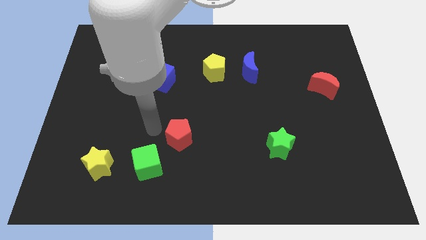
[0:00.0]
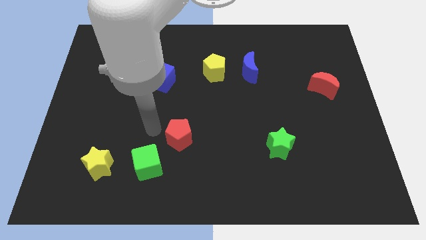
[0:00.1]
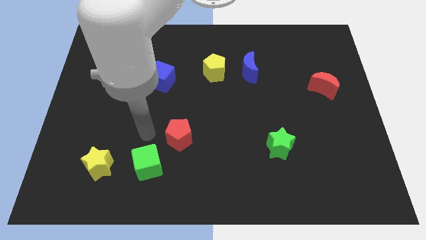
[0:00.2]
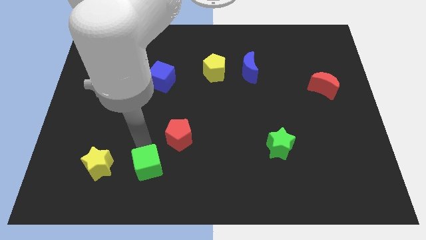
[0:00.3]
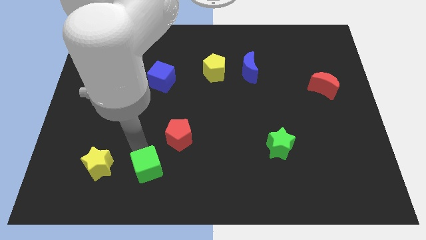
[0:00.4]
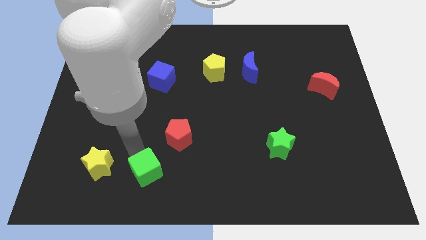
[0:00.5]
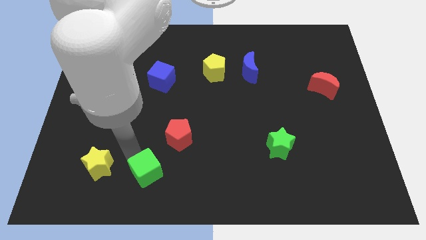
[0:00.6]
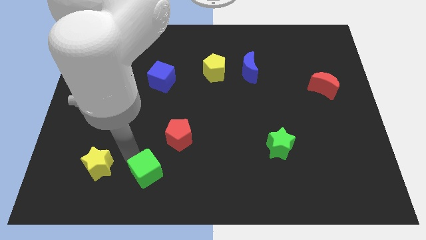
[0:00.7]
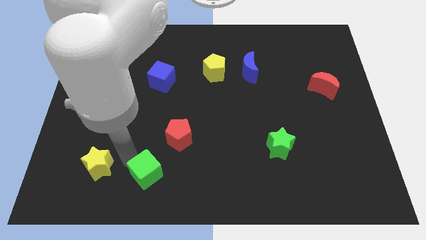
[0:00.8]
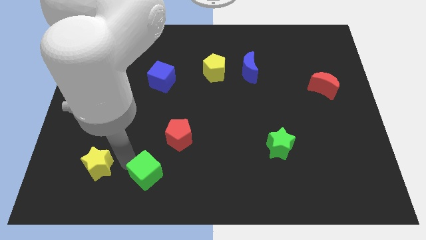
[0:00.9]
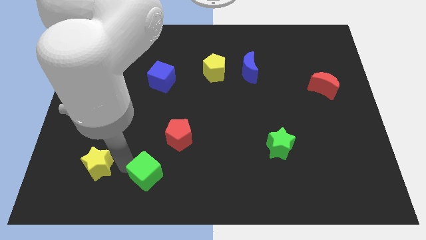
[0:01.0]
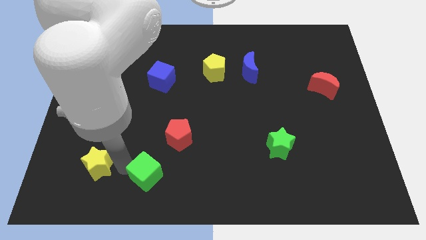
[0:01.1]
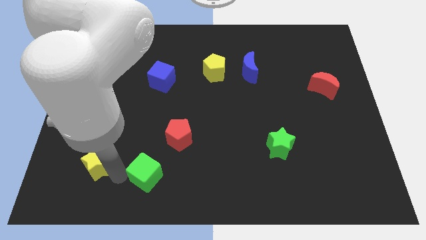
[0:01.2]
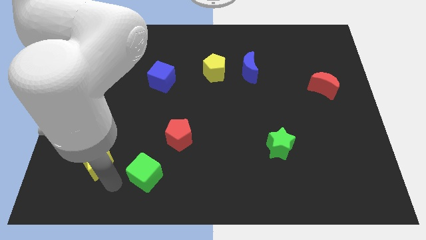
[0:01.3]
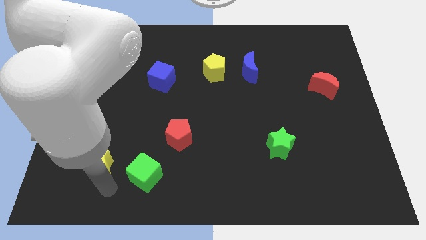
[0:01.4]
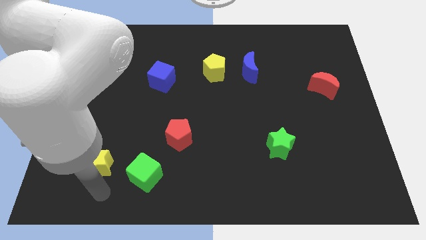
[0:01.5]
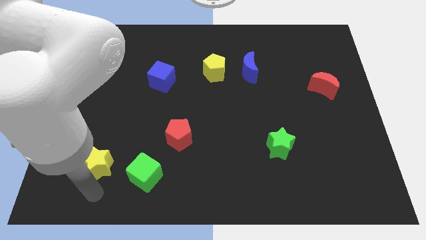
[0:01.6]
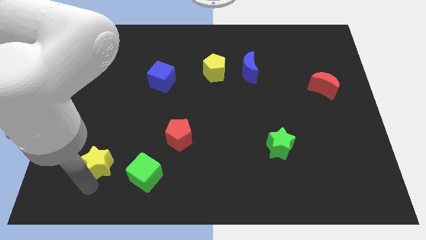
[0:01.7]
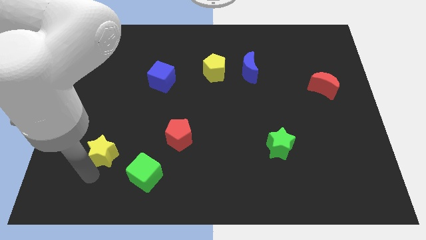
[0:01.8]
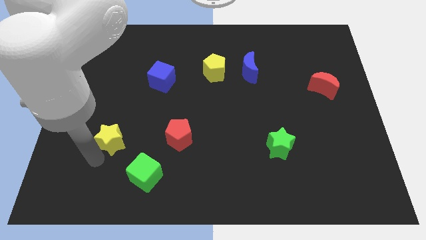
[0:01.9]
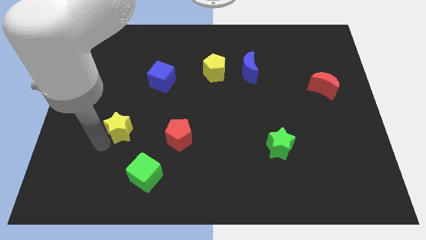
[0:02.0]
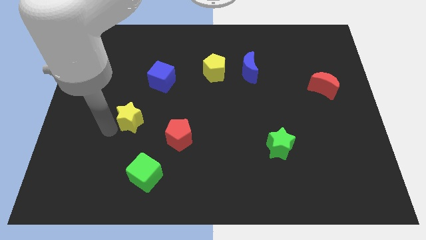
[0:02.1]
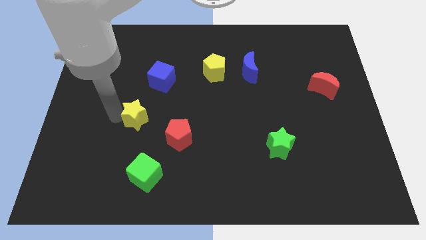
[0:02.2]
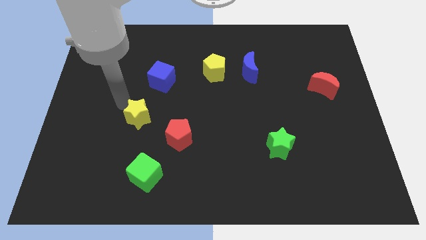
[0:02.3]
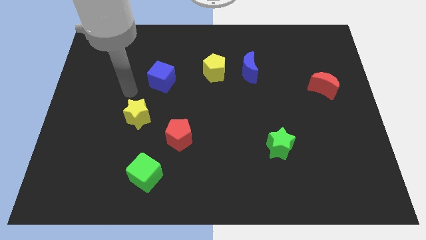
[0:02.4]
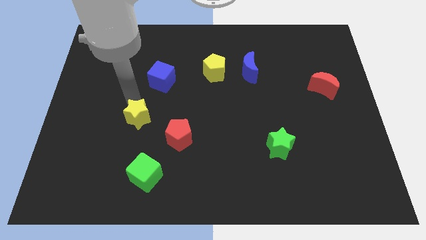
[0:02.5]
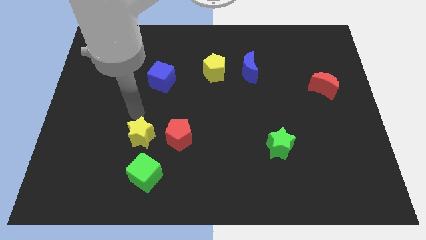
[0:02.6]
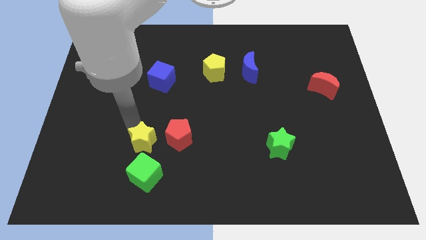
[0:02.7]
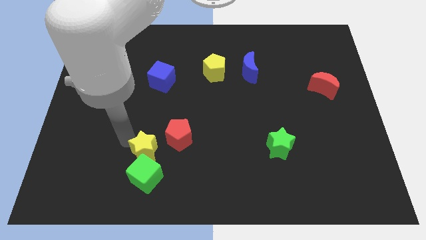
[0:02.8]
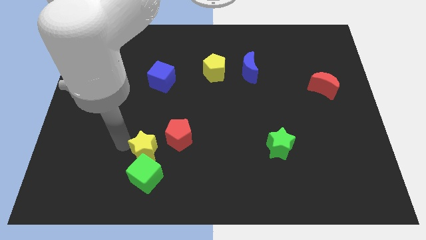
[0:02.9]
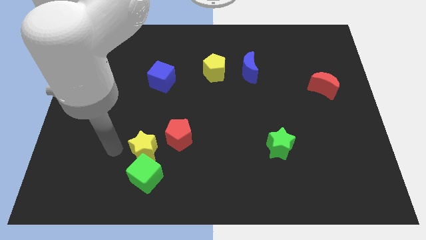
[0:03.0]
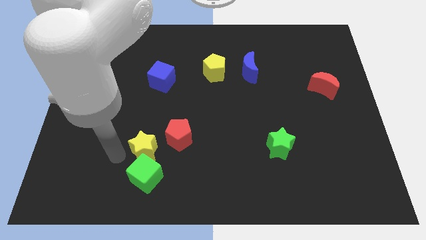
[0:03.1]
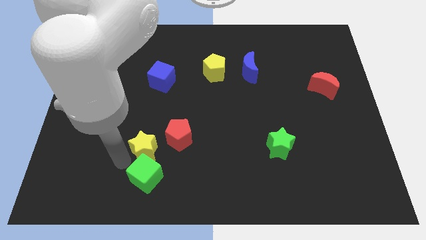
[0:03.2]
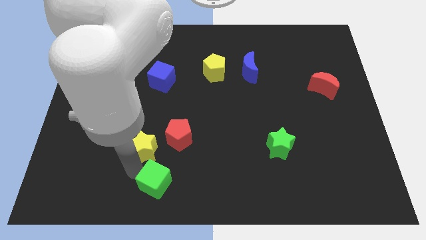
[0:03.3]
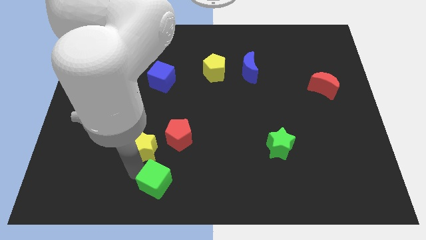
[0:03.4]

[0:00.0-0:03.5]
place the green cube and the yellow star beside the red pentagon

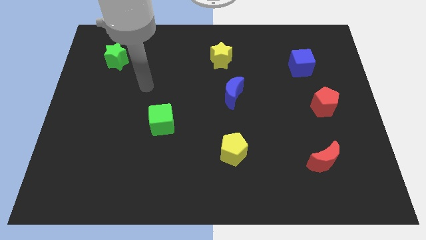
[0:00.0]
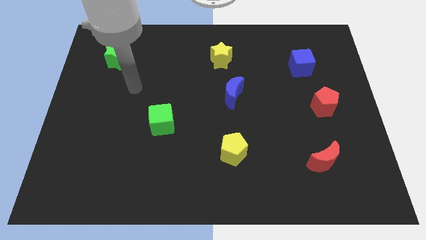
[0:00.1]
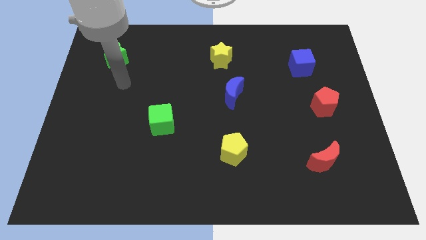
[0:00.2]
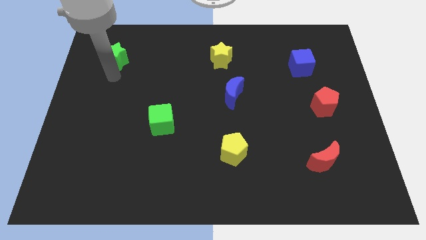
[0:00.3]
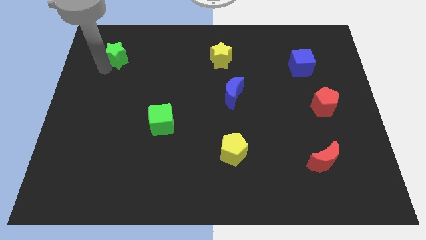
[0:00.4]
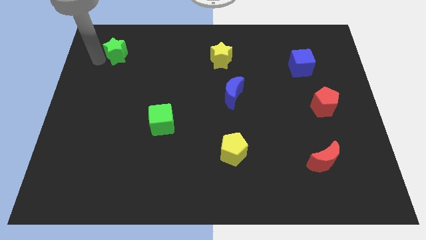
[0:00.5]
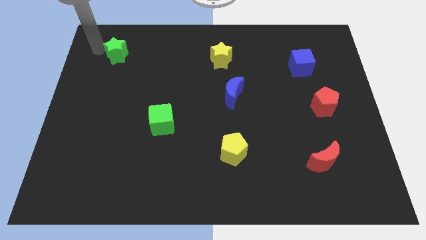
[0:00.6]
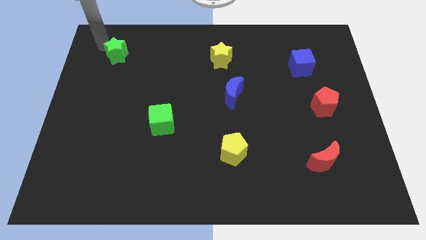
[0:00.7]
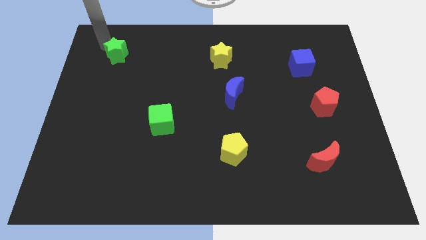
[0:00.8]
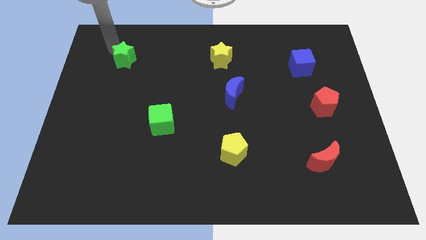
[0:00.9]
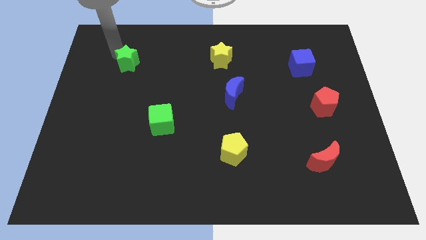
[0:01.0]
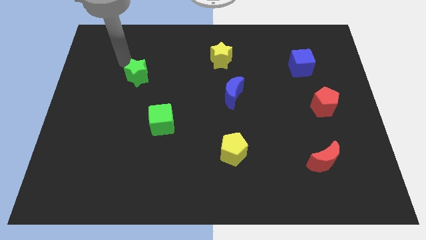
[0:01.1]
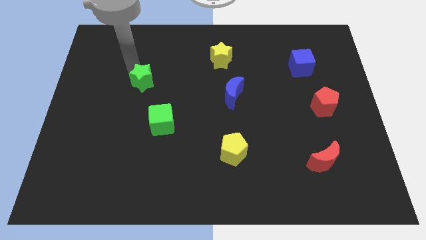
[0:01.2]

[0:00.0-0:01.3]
push the green star to the top left of the green cube

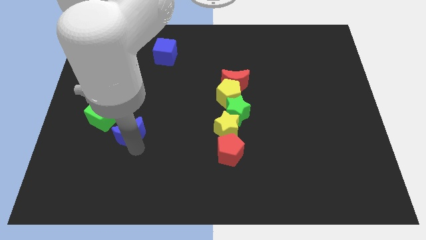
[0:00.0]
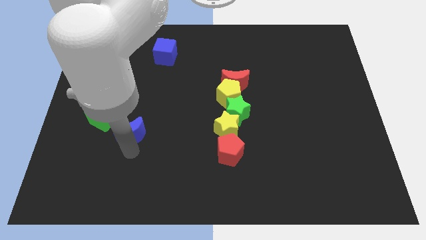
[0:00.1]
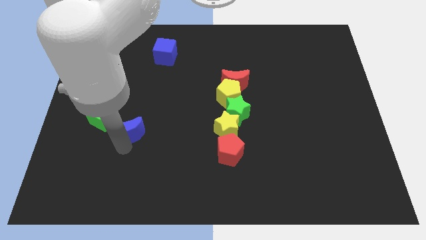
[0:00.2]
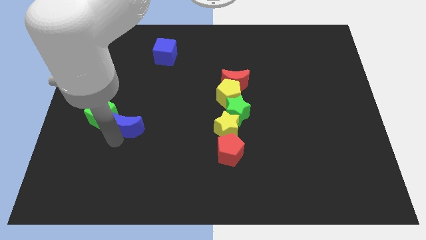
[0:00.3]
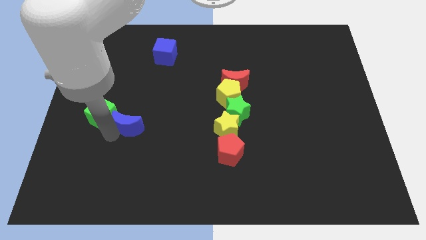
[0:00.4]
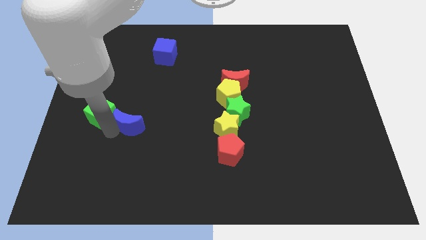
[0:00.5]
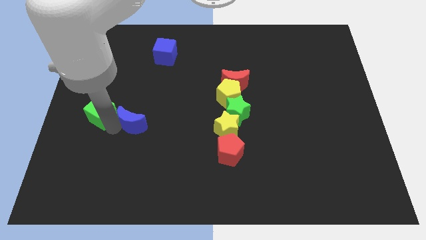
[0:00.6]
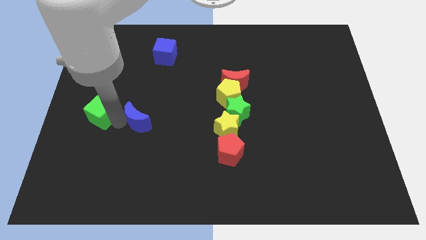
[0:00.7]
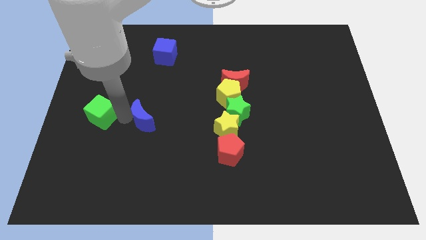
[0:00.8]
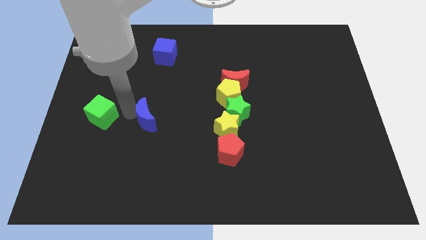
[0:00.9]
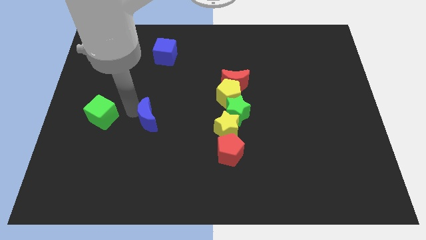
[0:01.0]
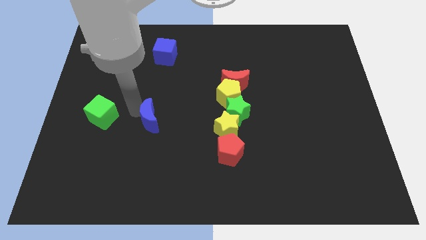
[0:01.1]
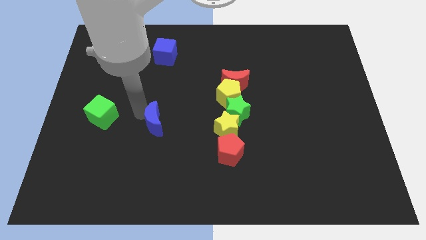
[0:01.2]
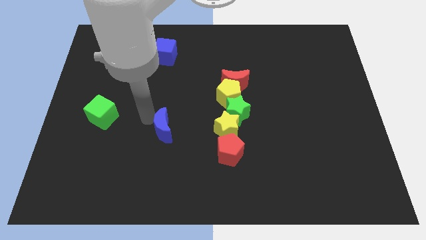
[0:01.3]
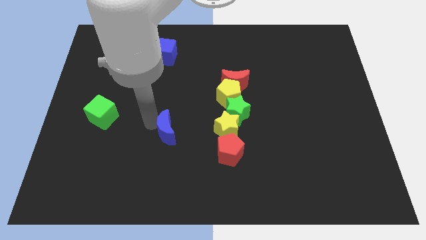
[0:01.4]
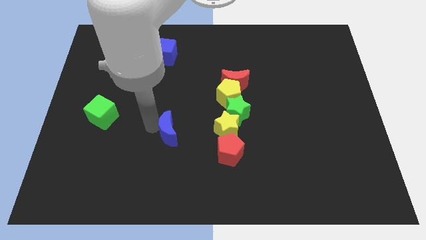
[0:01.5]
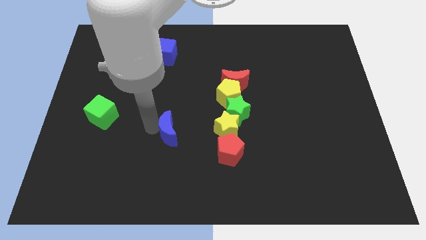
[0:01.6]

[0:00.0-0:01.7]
separate the blue moon from the green cube

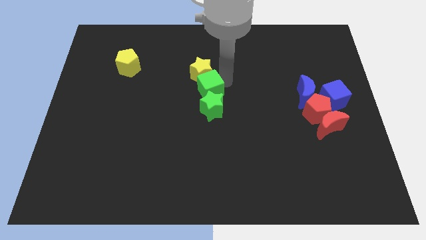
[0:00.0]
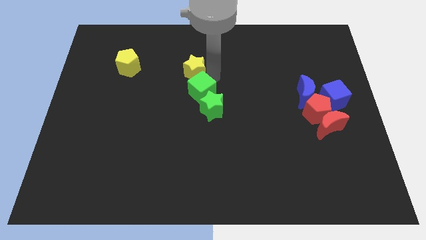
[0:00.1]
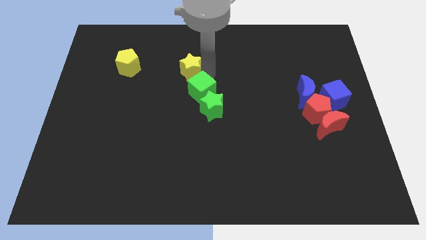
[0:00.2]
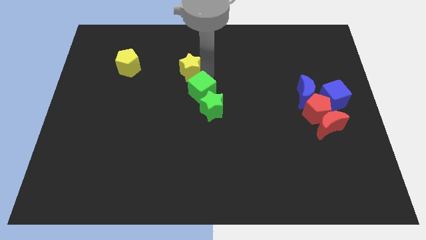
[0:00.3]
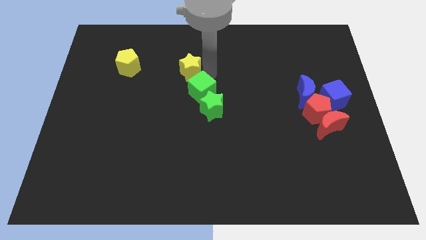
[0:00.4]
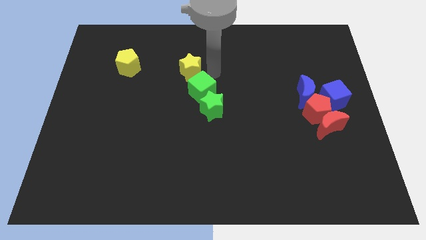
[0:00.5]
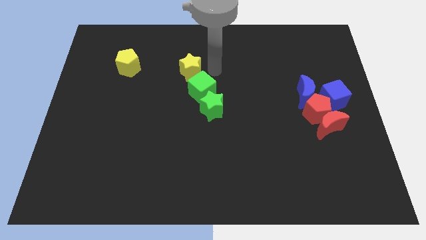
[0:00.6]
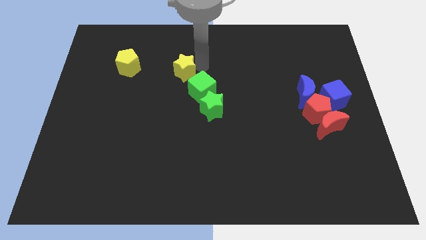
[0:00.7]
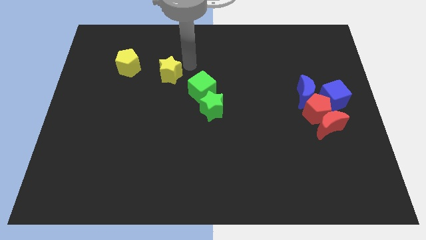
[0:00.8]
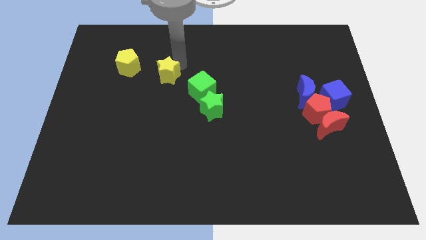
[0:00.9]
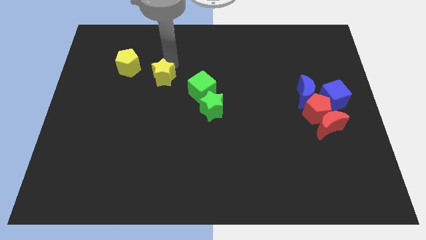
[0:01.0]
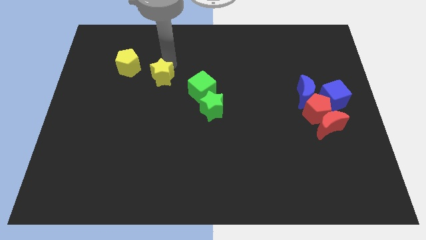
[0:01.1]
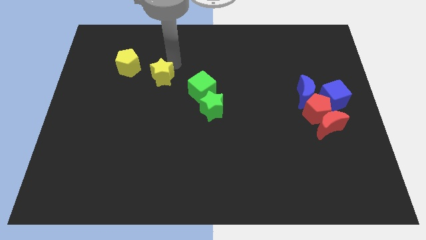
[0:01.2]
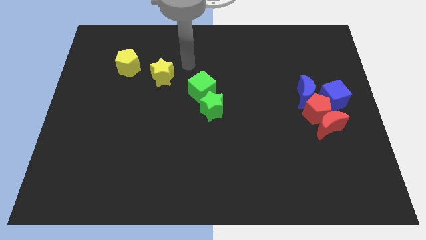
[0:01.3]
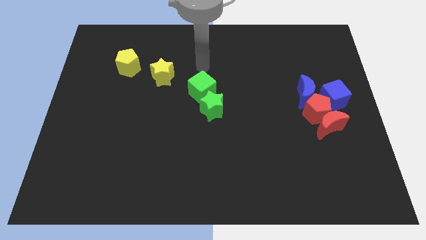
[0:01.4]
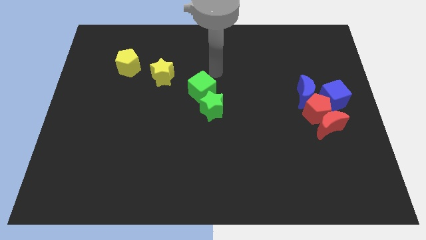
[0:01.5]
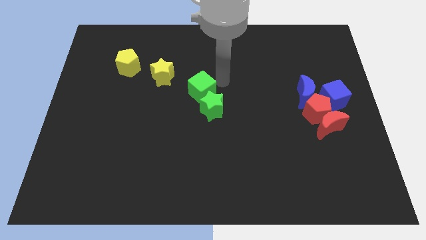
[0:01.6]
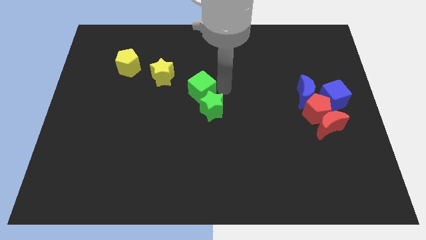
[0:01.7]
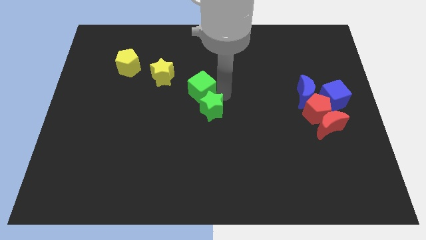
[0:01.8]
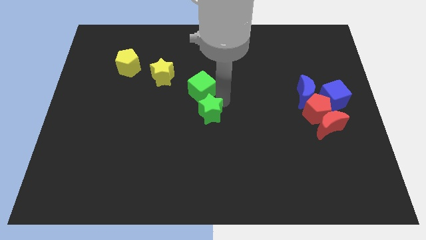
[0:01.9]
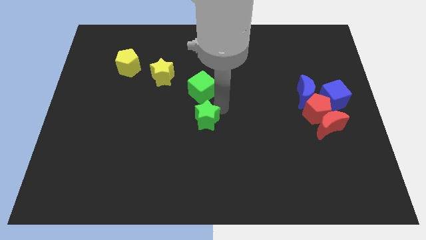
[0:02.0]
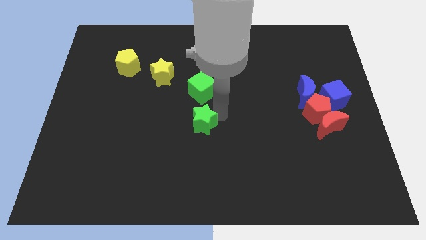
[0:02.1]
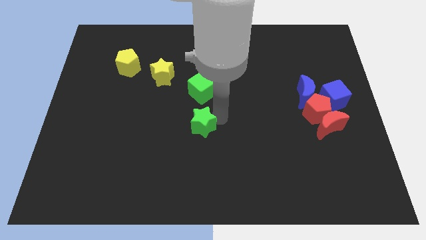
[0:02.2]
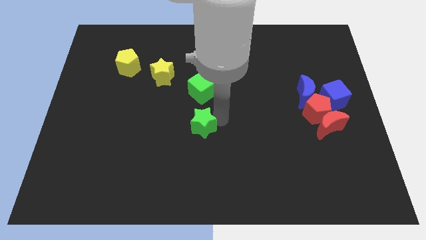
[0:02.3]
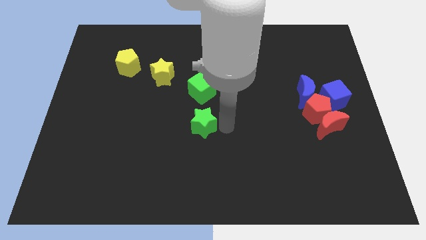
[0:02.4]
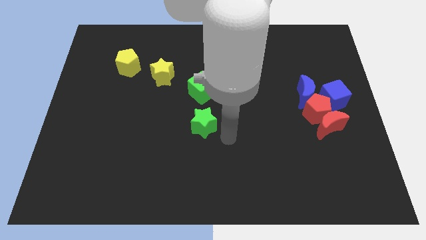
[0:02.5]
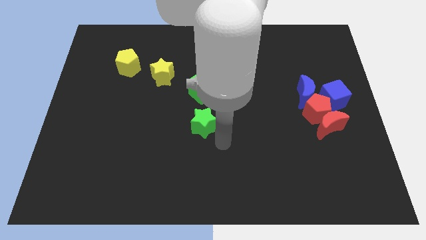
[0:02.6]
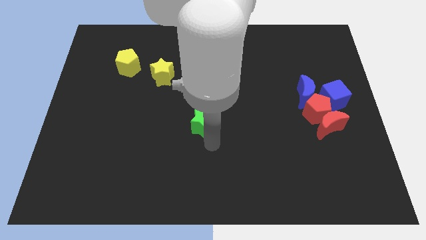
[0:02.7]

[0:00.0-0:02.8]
separate yellow star and green star from green cube
